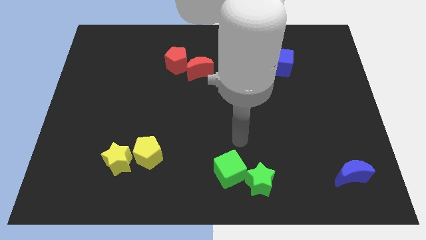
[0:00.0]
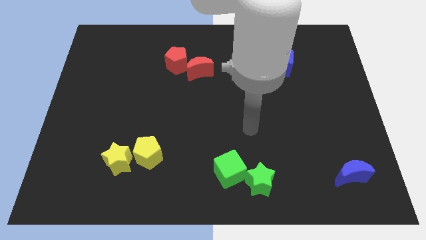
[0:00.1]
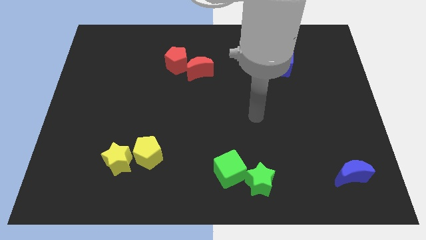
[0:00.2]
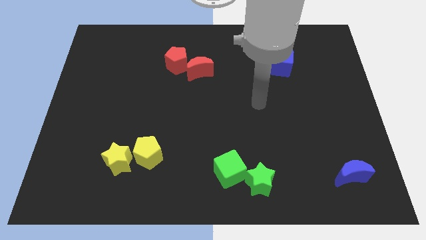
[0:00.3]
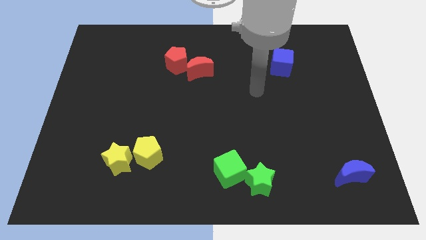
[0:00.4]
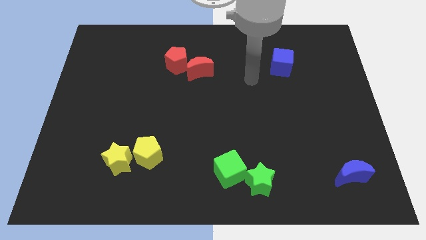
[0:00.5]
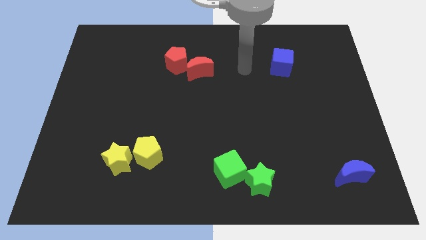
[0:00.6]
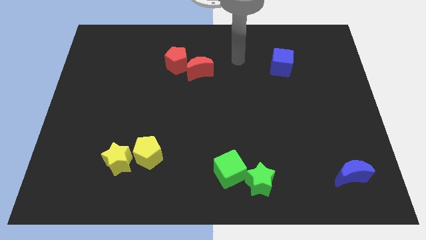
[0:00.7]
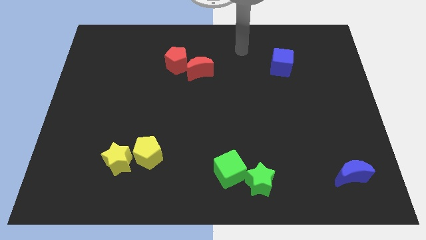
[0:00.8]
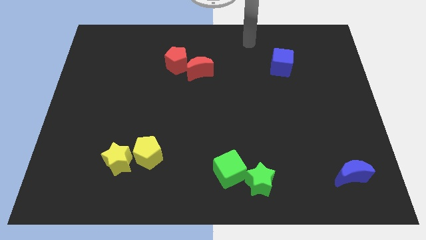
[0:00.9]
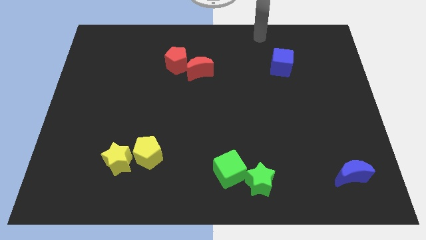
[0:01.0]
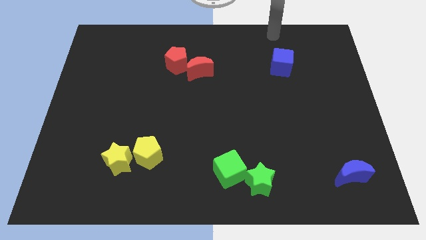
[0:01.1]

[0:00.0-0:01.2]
move your arm away from the green cube

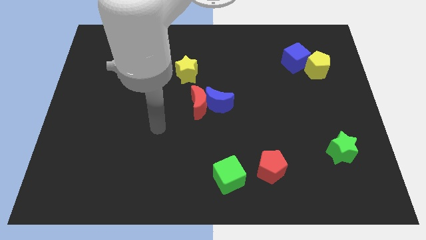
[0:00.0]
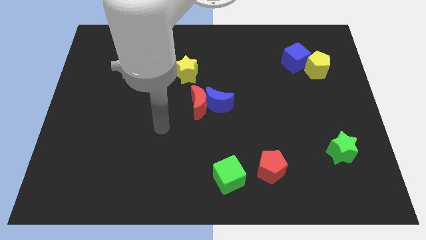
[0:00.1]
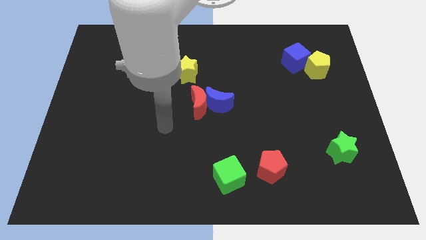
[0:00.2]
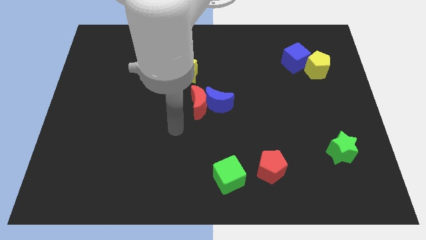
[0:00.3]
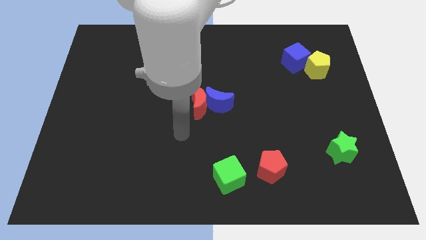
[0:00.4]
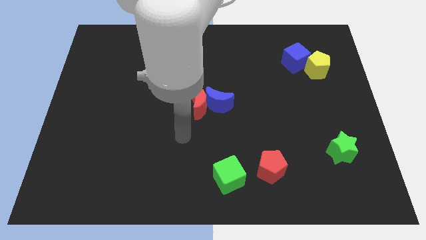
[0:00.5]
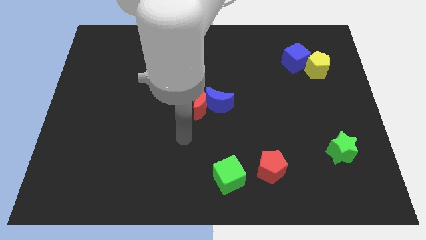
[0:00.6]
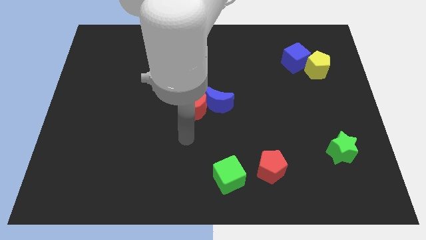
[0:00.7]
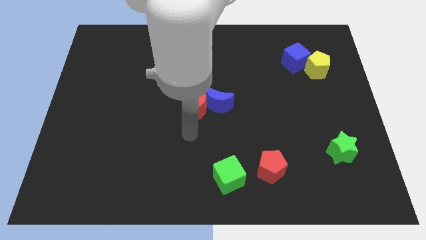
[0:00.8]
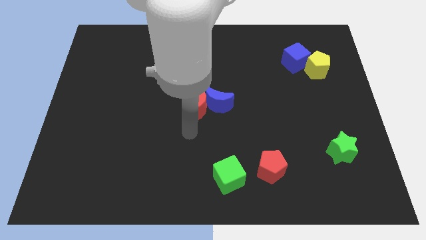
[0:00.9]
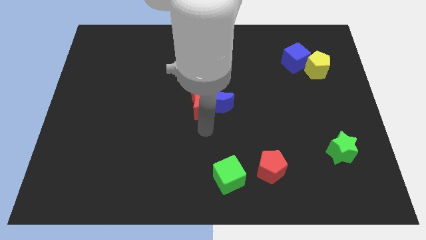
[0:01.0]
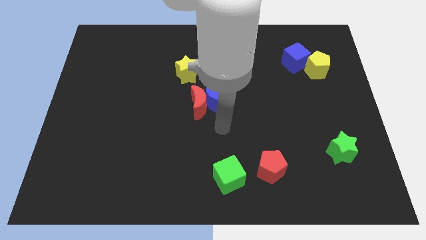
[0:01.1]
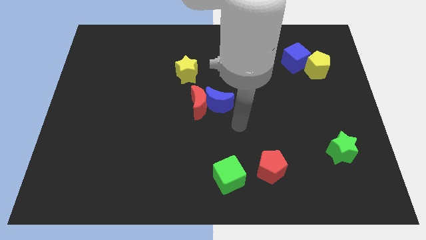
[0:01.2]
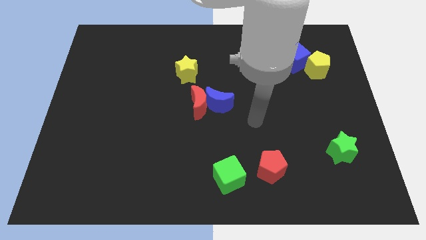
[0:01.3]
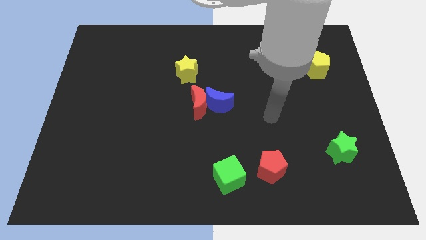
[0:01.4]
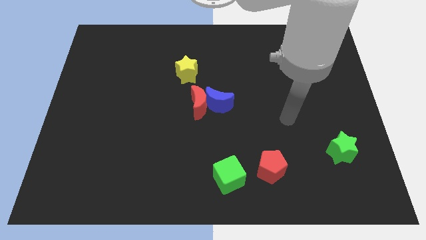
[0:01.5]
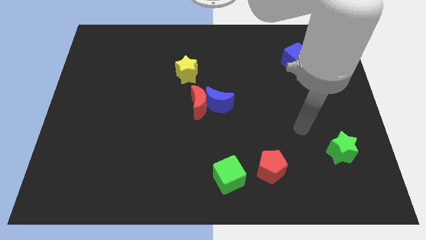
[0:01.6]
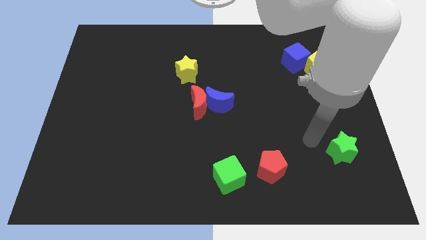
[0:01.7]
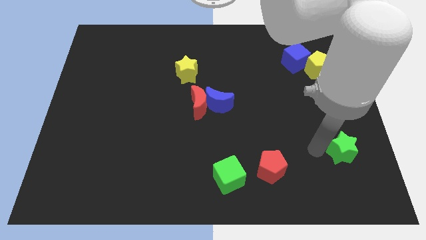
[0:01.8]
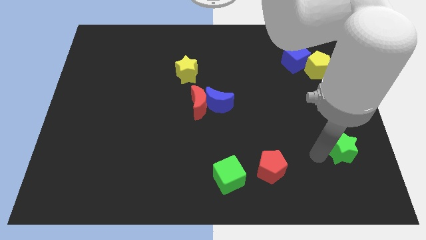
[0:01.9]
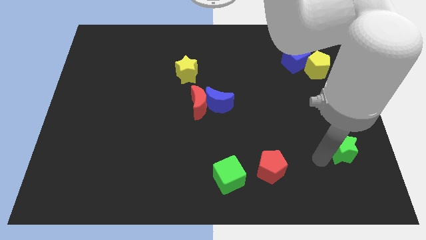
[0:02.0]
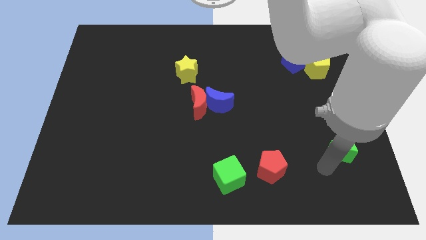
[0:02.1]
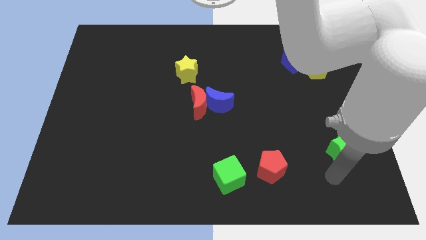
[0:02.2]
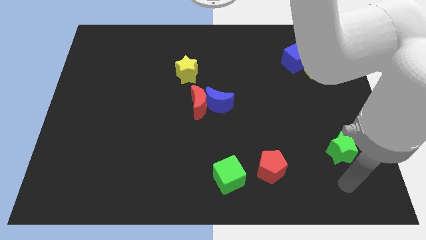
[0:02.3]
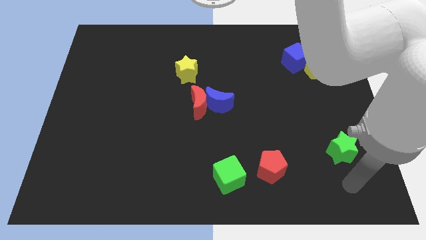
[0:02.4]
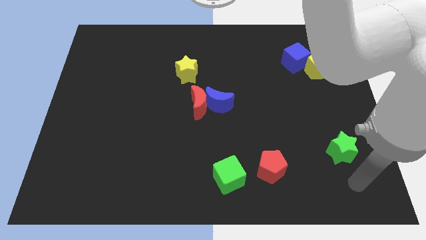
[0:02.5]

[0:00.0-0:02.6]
place your arm below the green star

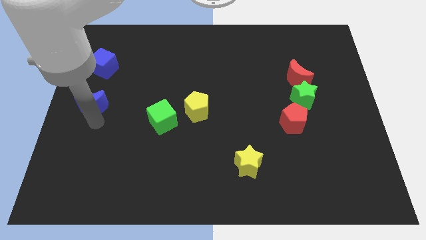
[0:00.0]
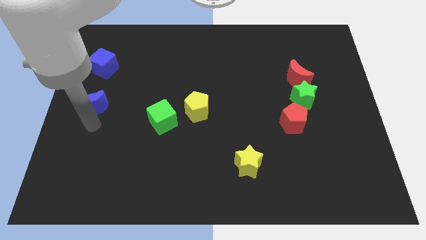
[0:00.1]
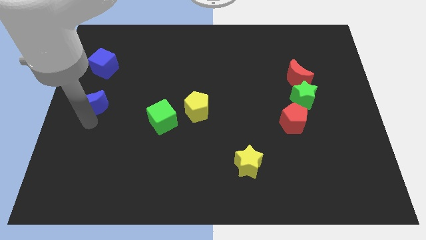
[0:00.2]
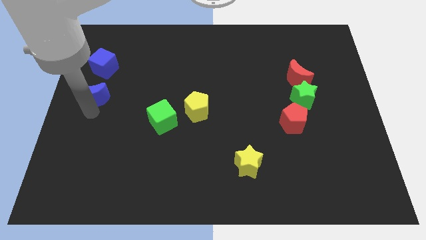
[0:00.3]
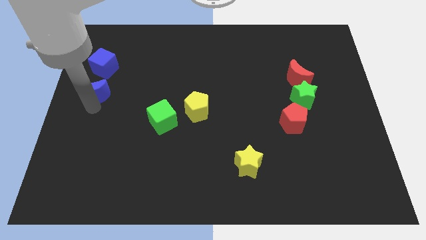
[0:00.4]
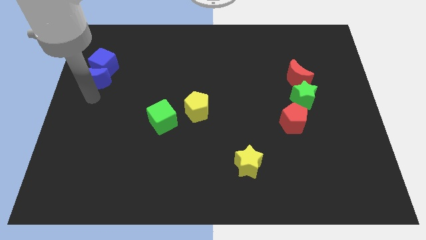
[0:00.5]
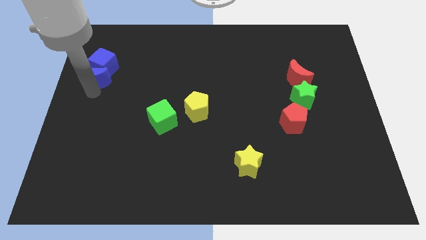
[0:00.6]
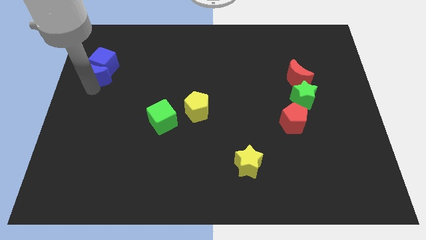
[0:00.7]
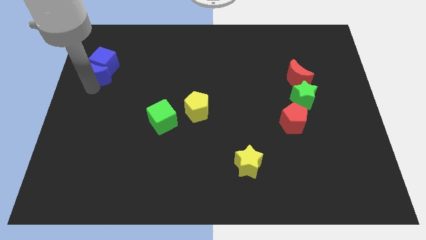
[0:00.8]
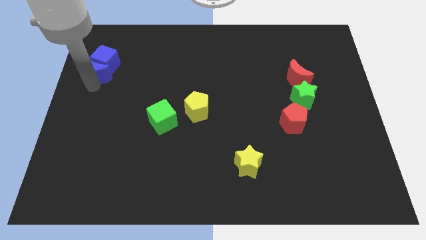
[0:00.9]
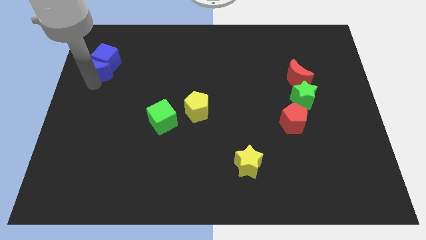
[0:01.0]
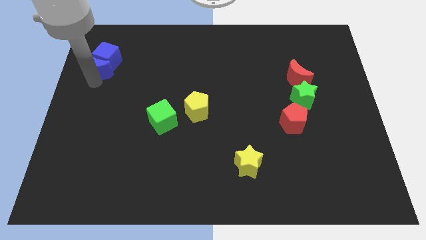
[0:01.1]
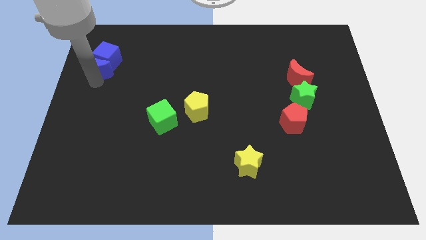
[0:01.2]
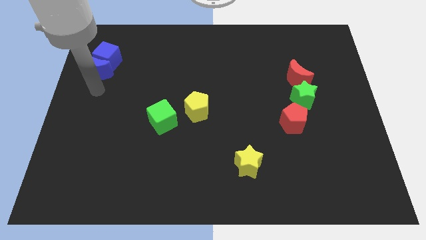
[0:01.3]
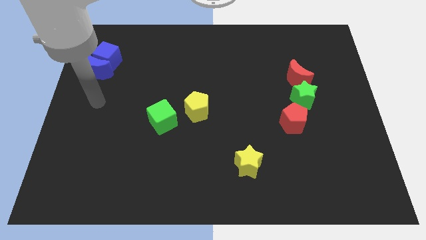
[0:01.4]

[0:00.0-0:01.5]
push the blue crescent into the blue cube

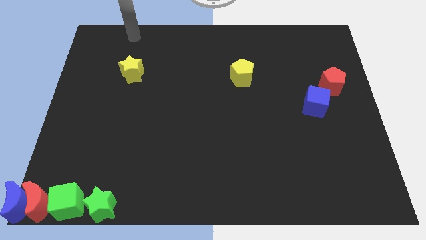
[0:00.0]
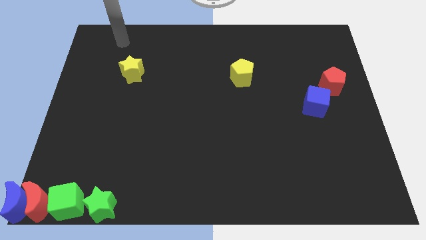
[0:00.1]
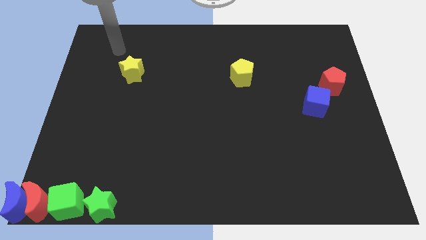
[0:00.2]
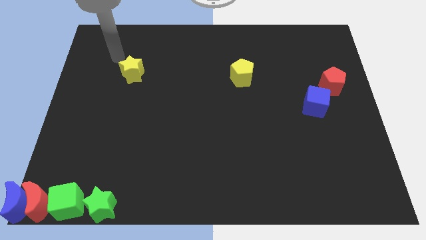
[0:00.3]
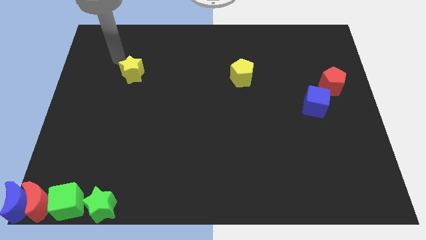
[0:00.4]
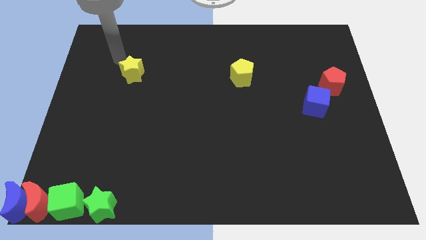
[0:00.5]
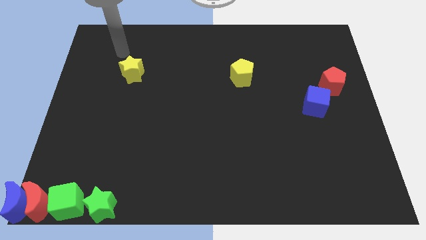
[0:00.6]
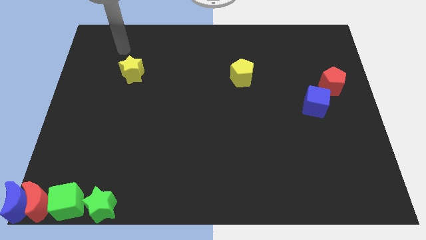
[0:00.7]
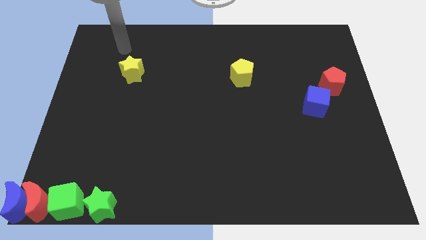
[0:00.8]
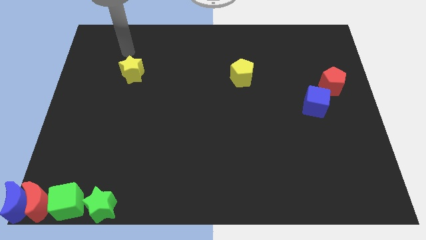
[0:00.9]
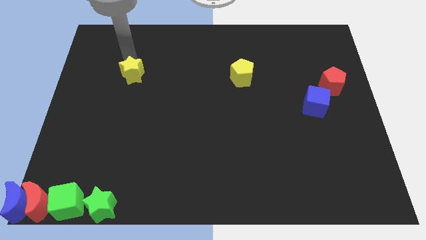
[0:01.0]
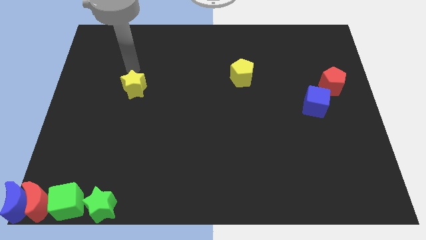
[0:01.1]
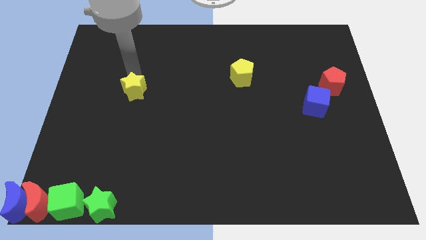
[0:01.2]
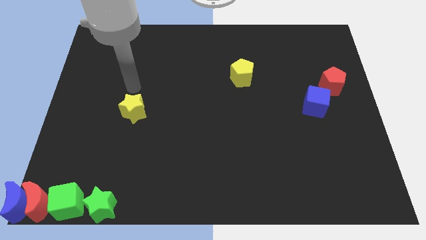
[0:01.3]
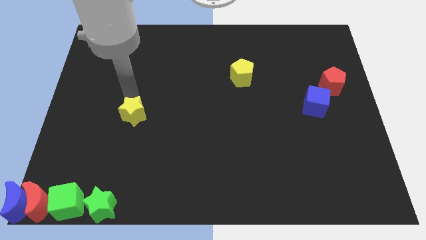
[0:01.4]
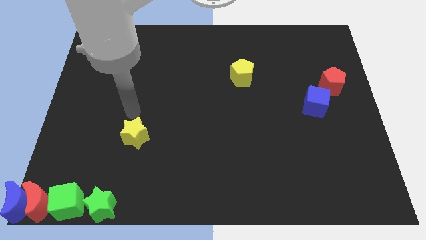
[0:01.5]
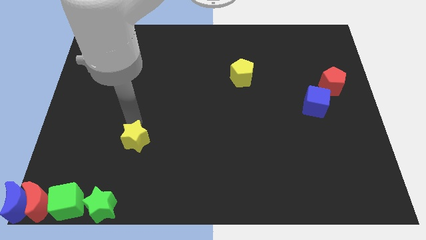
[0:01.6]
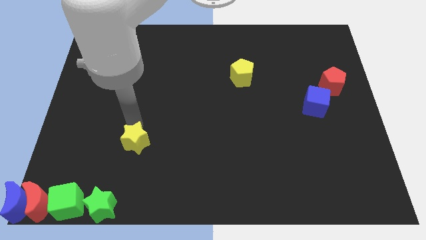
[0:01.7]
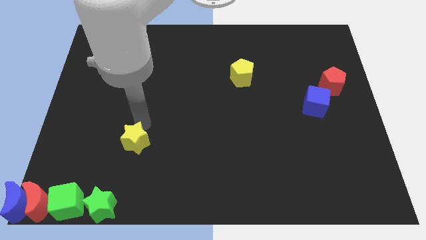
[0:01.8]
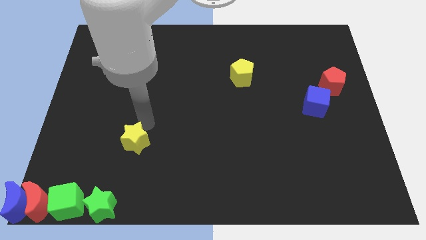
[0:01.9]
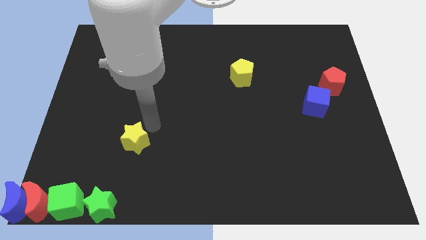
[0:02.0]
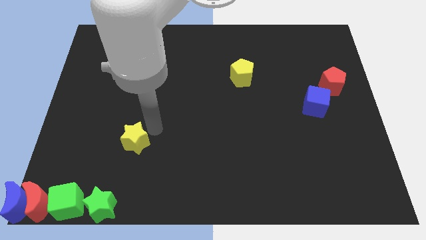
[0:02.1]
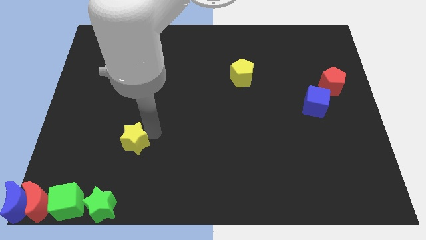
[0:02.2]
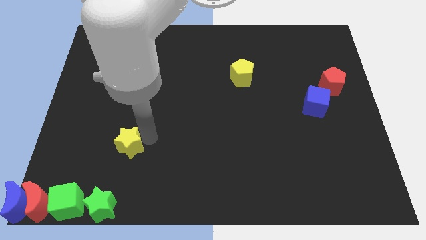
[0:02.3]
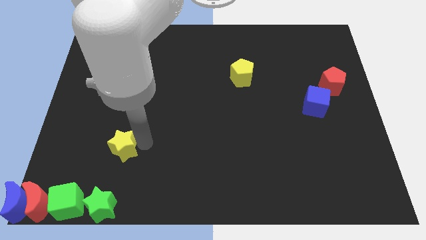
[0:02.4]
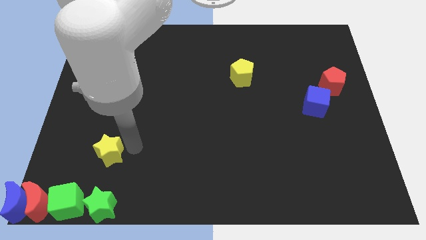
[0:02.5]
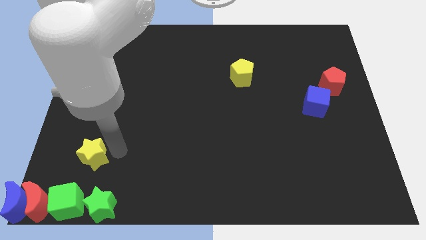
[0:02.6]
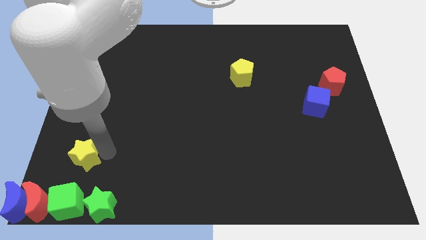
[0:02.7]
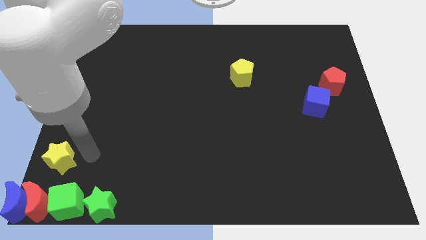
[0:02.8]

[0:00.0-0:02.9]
move the yellow star above the green cube

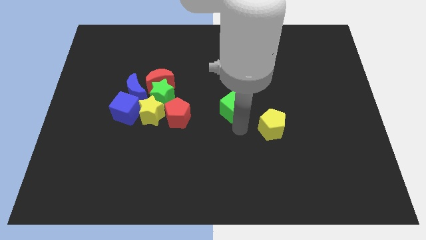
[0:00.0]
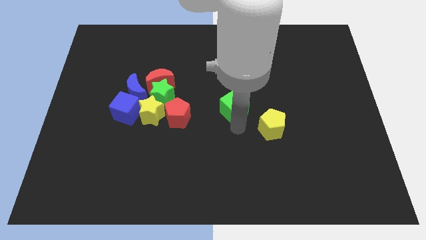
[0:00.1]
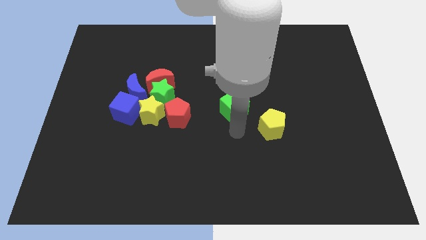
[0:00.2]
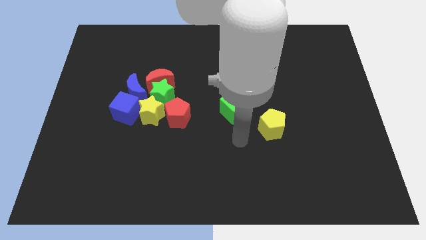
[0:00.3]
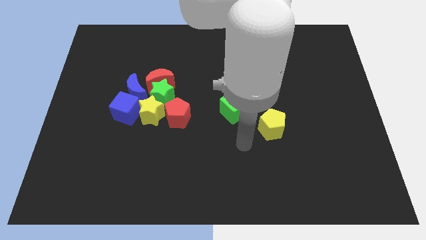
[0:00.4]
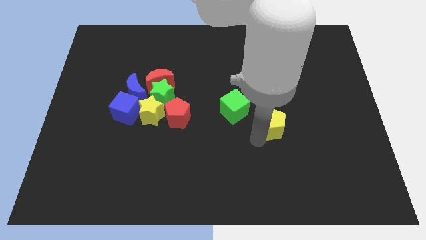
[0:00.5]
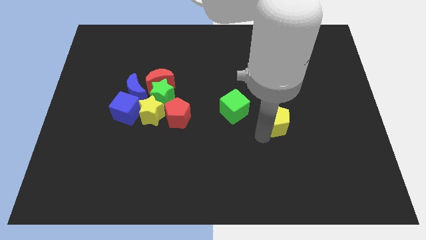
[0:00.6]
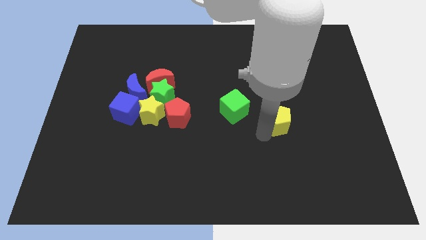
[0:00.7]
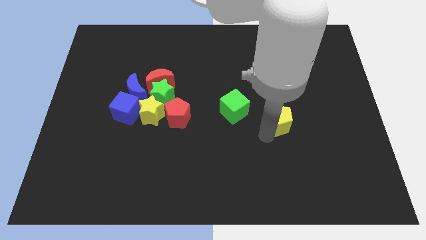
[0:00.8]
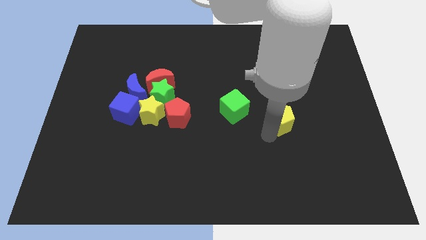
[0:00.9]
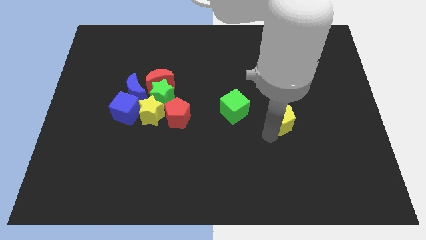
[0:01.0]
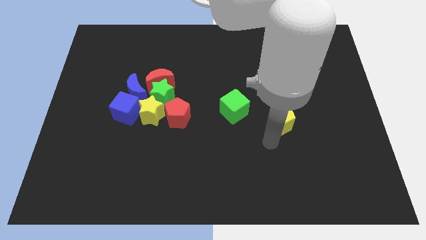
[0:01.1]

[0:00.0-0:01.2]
place the green cube parallel to red pentagon
